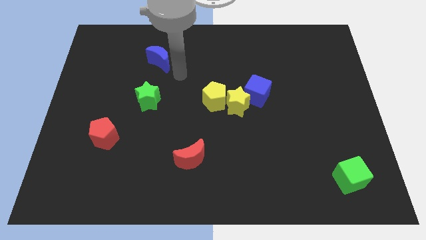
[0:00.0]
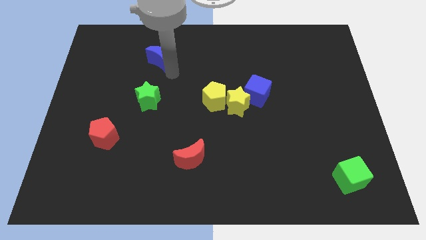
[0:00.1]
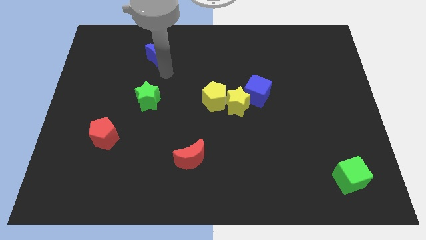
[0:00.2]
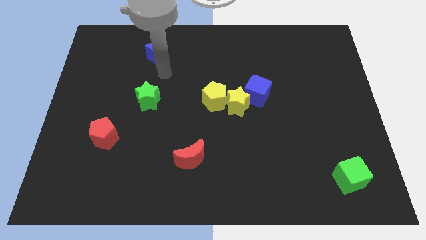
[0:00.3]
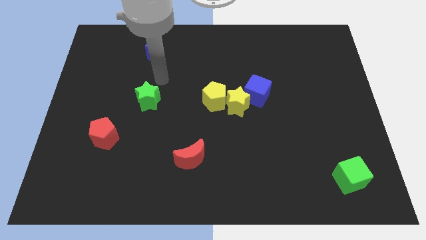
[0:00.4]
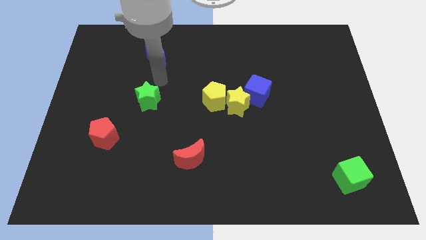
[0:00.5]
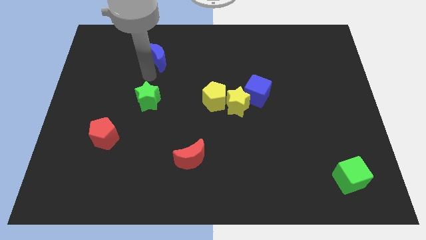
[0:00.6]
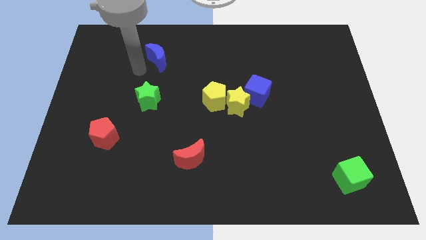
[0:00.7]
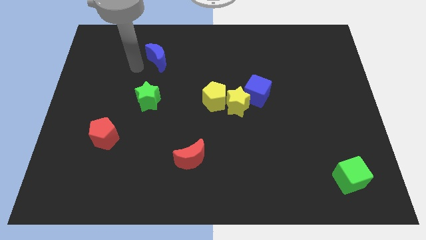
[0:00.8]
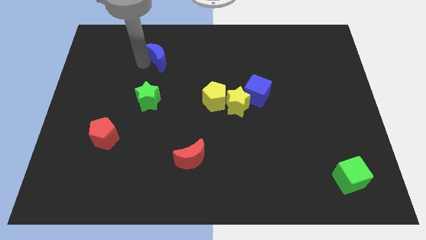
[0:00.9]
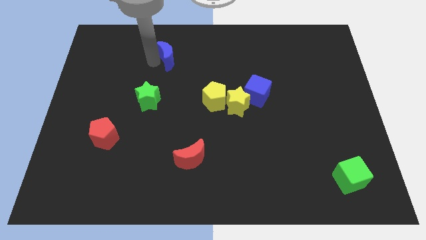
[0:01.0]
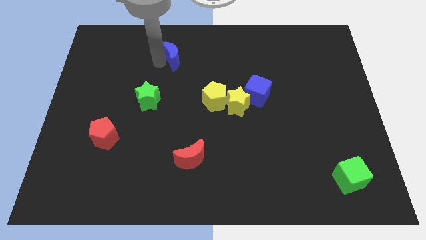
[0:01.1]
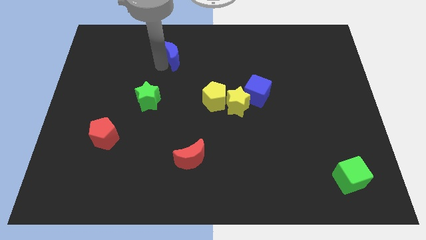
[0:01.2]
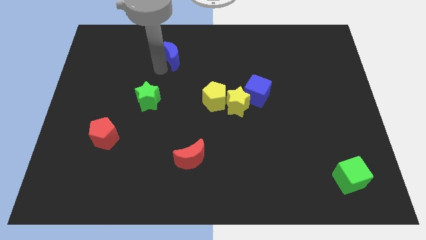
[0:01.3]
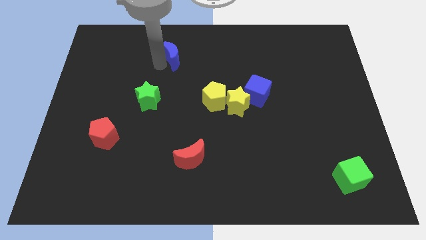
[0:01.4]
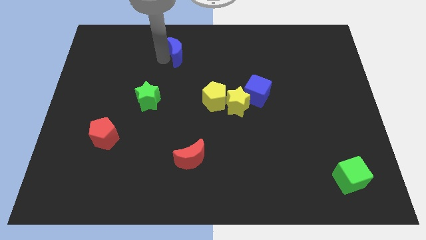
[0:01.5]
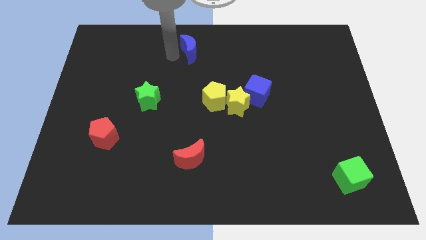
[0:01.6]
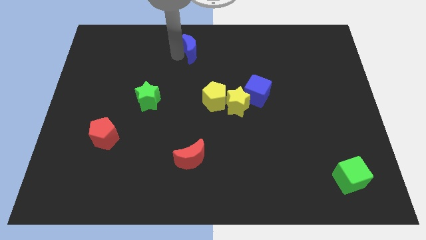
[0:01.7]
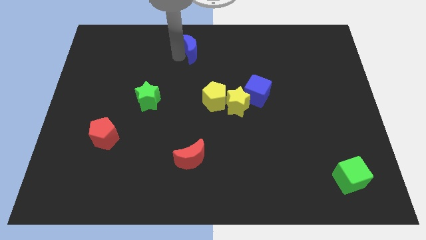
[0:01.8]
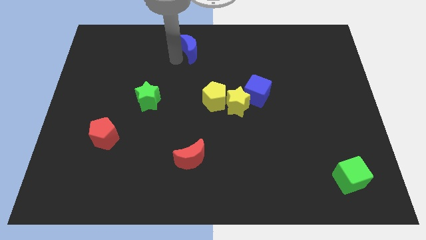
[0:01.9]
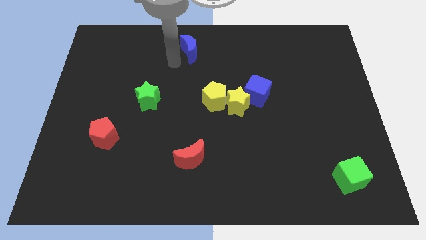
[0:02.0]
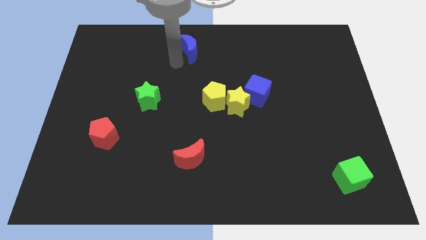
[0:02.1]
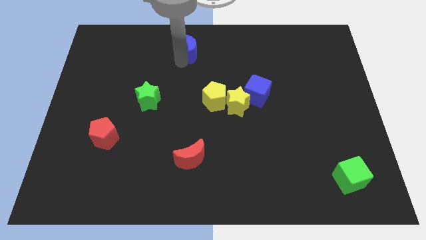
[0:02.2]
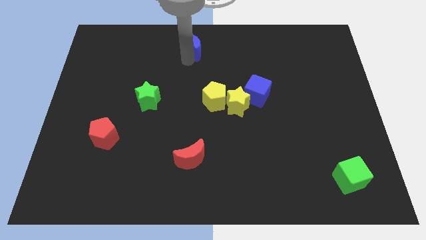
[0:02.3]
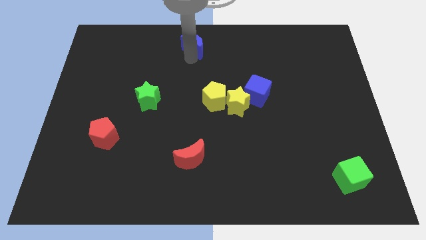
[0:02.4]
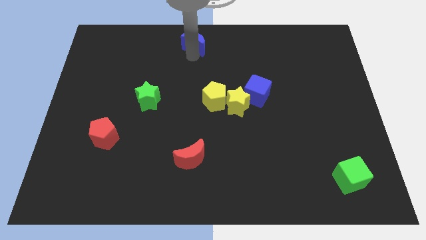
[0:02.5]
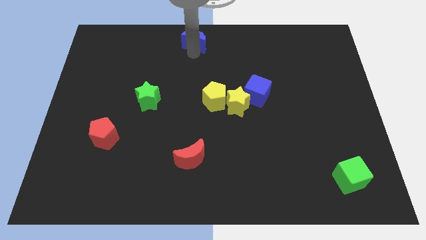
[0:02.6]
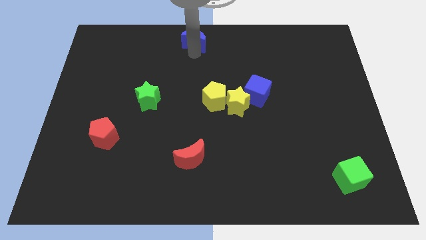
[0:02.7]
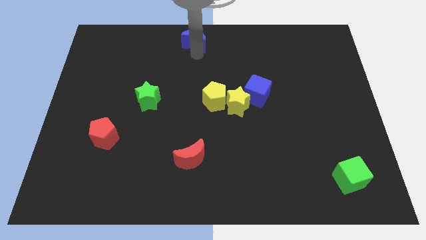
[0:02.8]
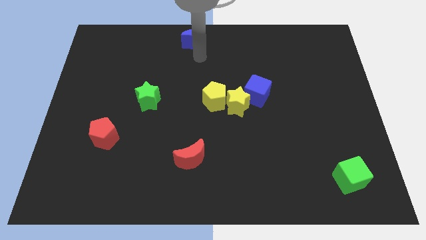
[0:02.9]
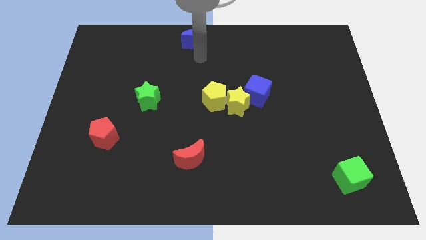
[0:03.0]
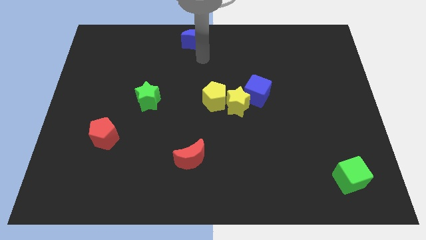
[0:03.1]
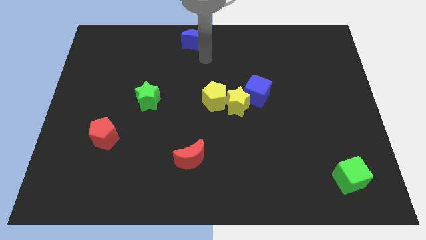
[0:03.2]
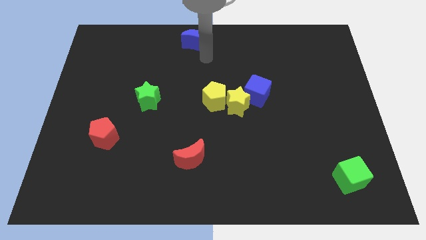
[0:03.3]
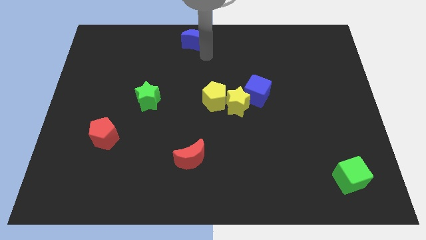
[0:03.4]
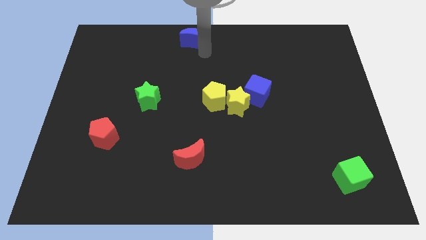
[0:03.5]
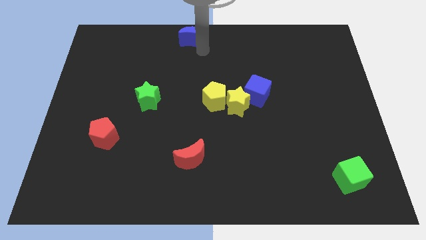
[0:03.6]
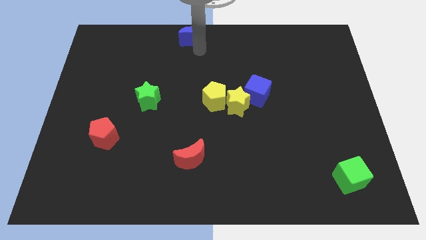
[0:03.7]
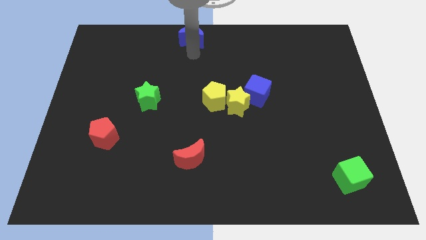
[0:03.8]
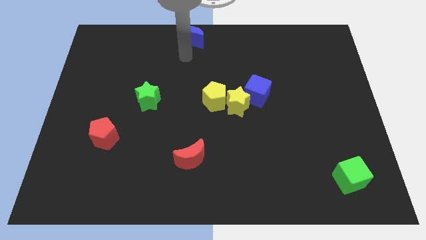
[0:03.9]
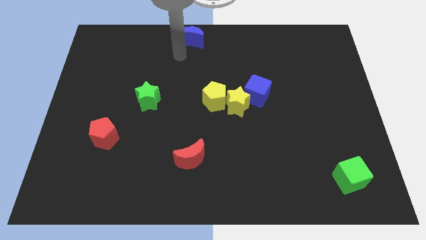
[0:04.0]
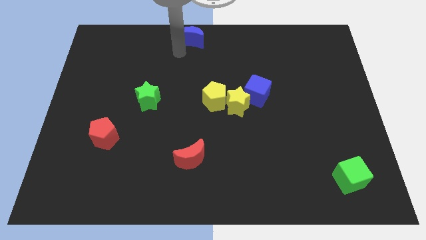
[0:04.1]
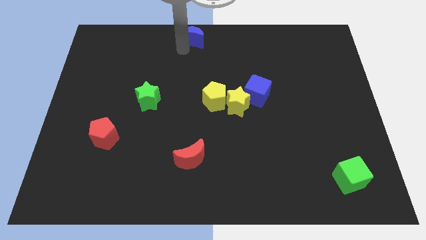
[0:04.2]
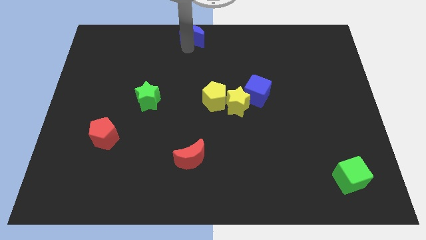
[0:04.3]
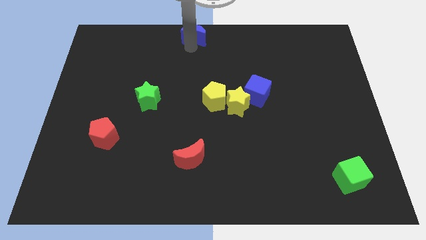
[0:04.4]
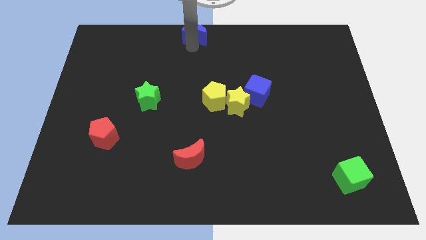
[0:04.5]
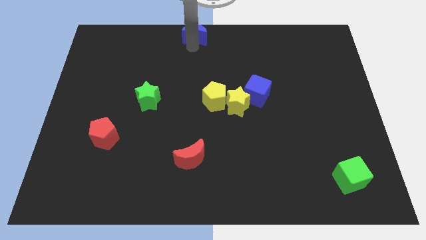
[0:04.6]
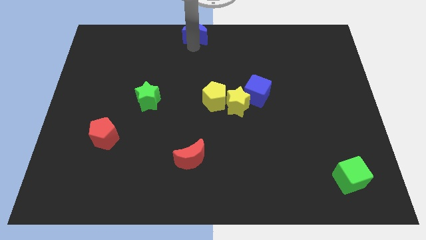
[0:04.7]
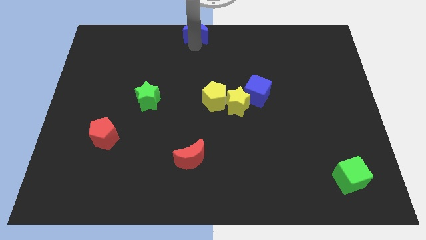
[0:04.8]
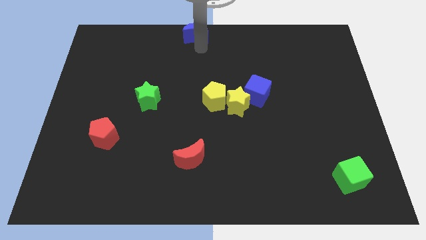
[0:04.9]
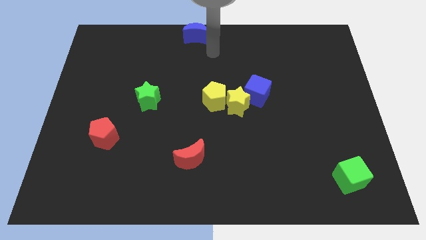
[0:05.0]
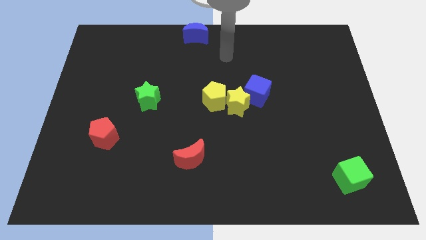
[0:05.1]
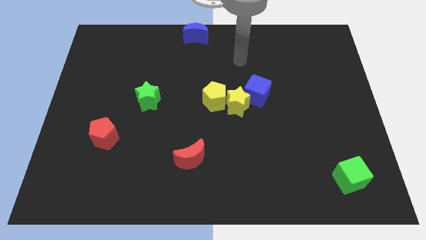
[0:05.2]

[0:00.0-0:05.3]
push the blue moon to the top center

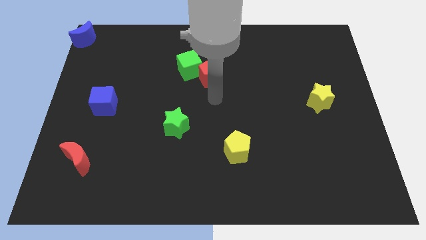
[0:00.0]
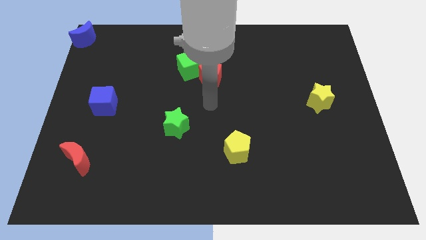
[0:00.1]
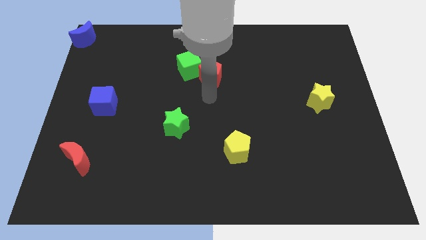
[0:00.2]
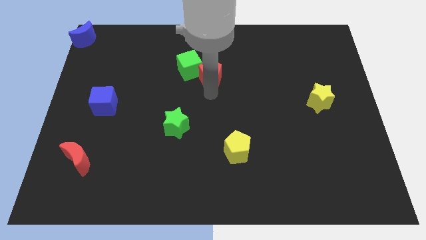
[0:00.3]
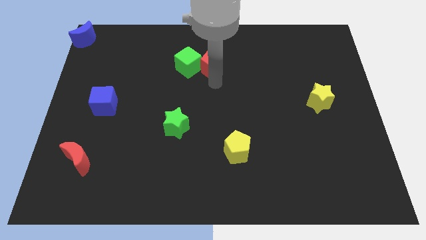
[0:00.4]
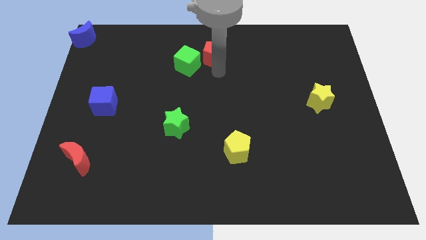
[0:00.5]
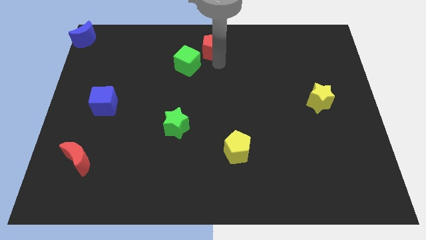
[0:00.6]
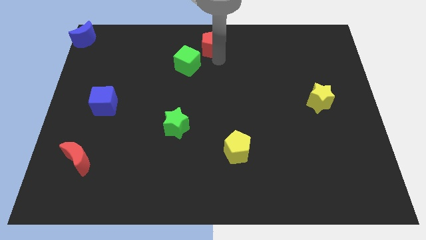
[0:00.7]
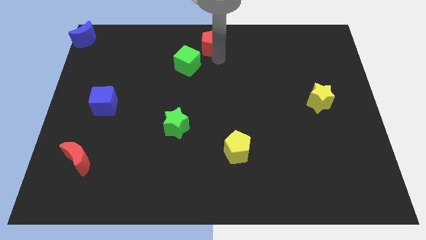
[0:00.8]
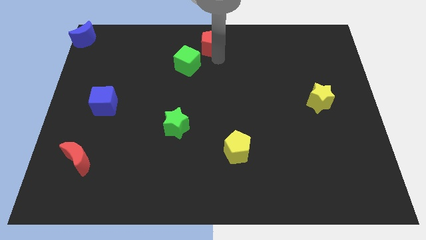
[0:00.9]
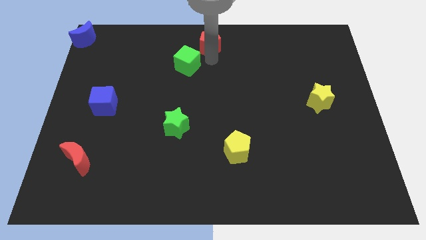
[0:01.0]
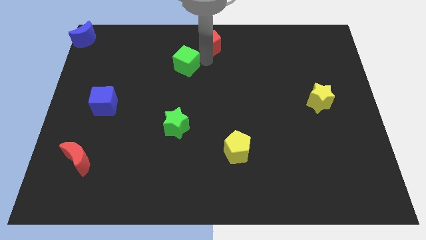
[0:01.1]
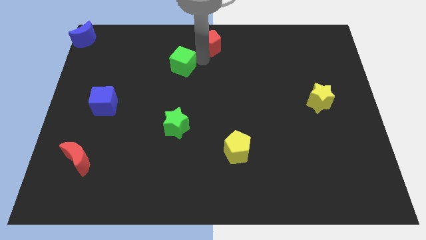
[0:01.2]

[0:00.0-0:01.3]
place red pentagon to the top center of the board

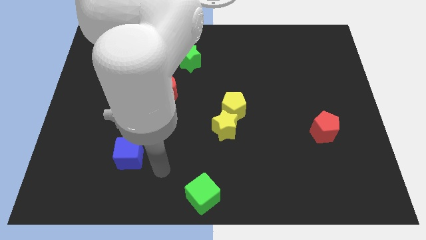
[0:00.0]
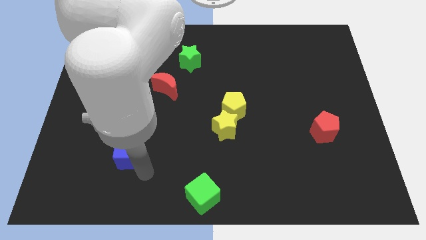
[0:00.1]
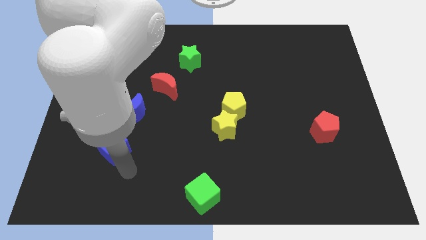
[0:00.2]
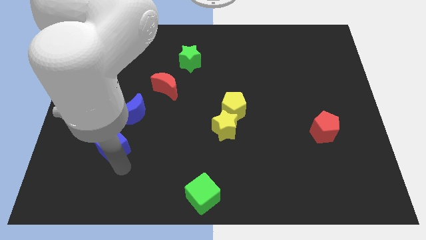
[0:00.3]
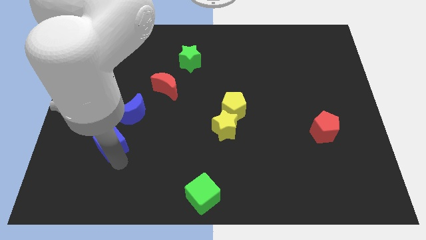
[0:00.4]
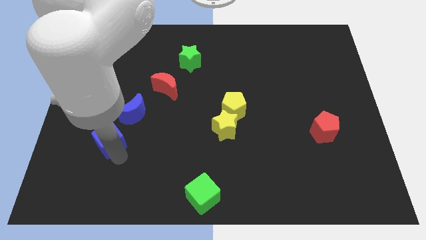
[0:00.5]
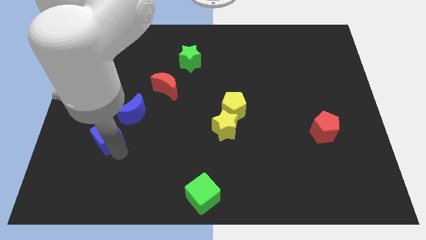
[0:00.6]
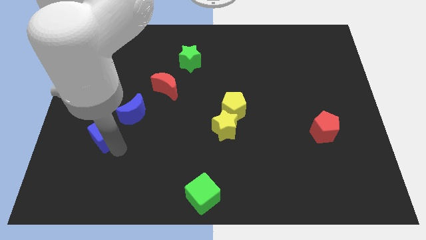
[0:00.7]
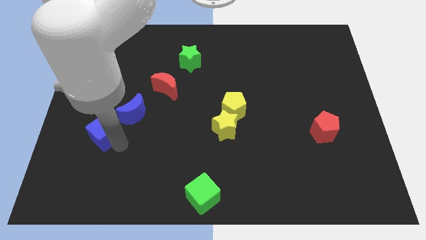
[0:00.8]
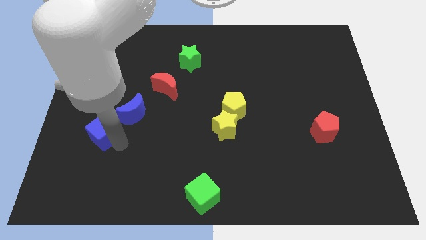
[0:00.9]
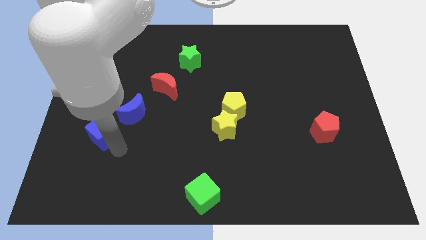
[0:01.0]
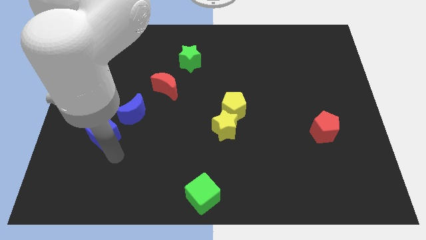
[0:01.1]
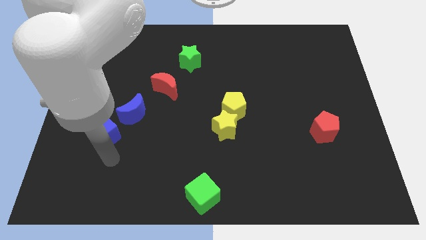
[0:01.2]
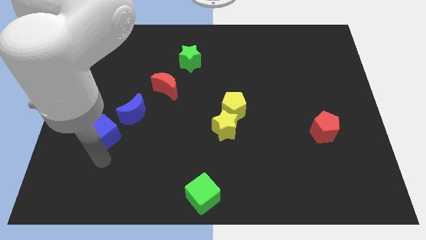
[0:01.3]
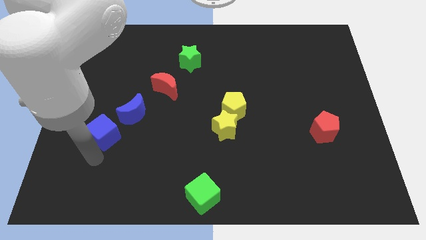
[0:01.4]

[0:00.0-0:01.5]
place the blue cube left diagonally towards blue crescent

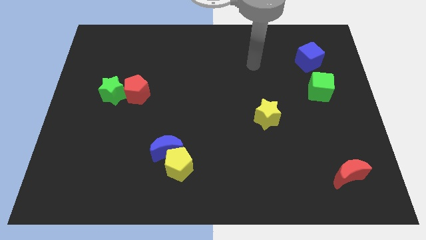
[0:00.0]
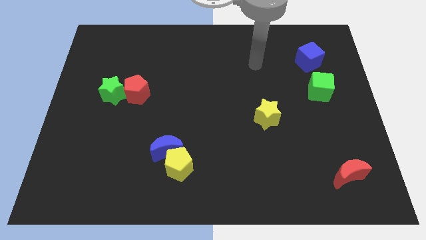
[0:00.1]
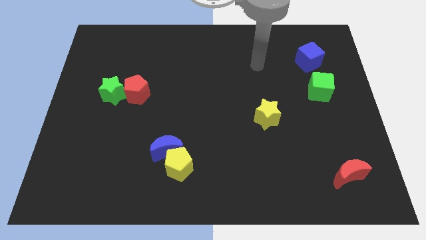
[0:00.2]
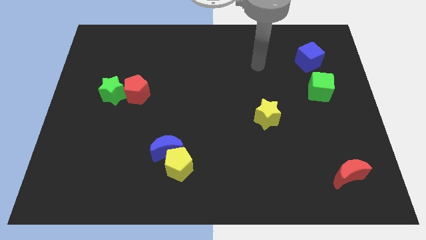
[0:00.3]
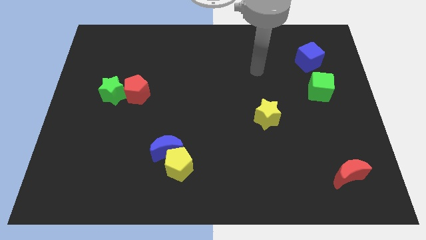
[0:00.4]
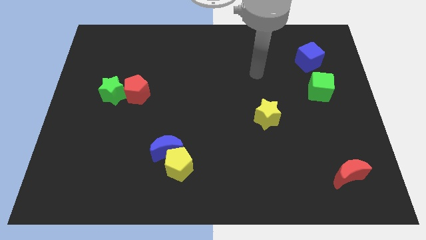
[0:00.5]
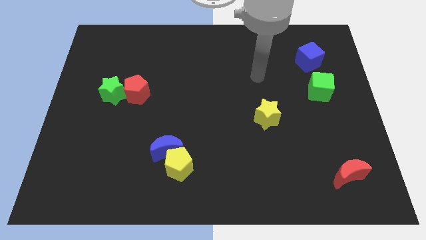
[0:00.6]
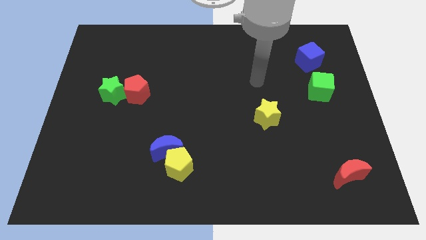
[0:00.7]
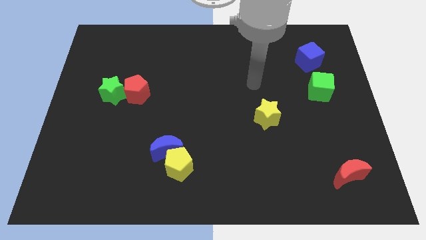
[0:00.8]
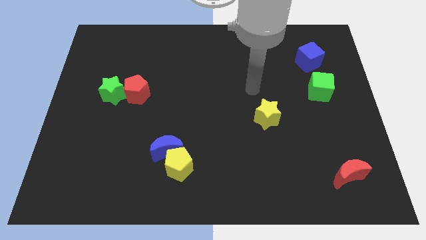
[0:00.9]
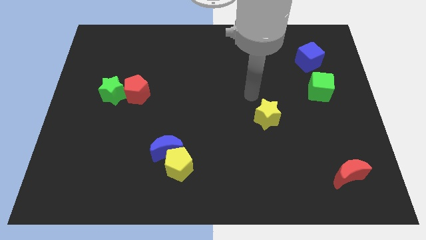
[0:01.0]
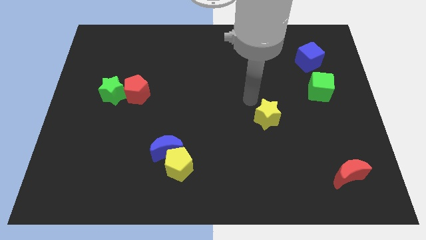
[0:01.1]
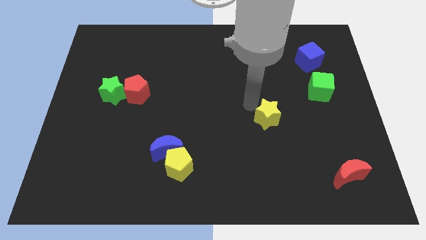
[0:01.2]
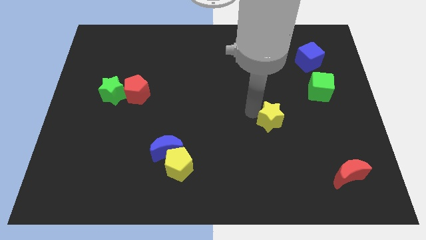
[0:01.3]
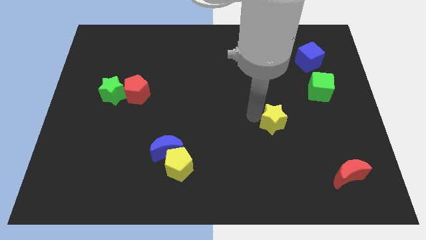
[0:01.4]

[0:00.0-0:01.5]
move the yellow star slightly to the right
